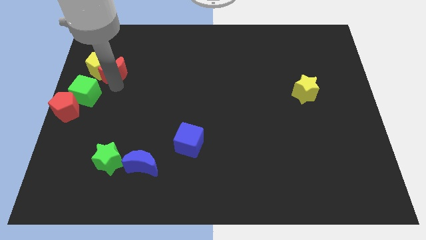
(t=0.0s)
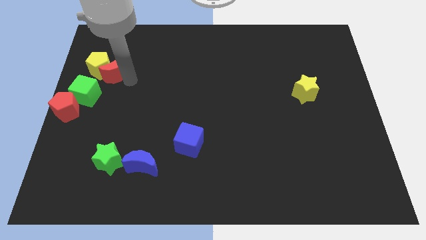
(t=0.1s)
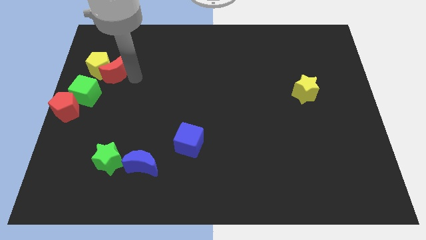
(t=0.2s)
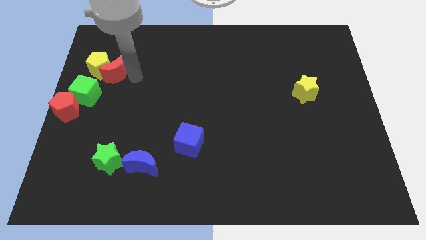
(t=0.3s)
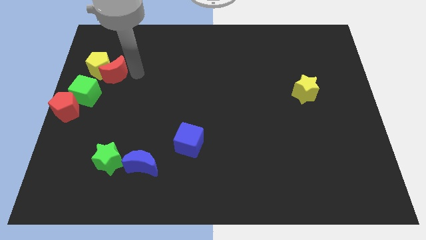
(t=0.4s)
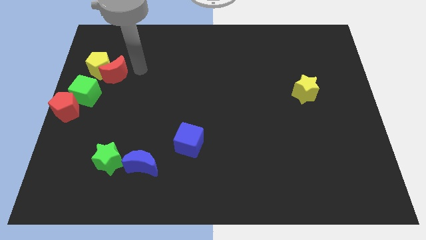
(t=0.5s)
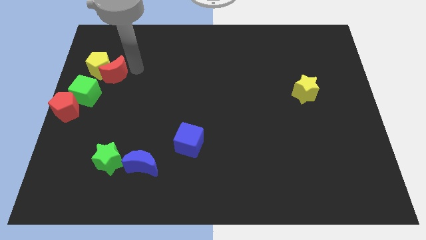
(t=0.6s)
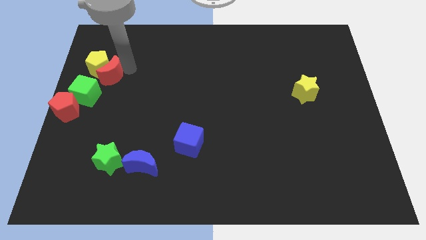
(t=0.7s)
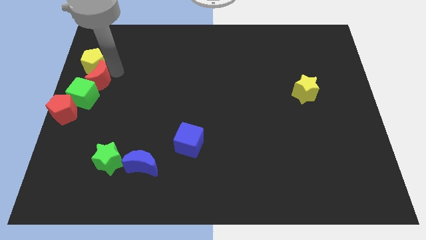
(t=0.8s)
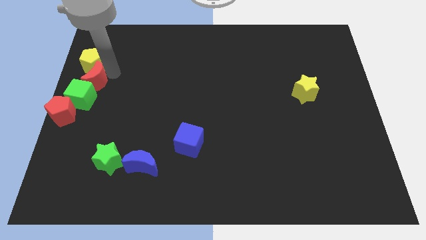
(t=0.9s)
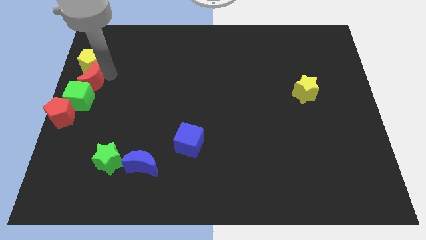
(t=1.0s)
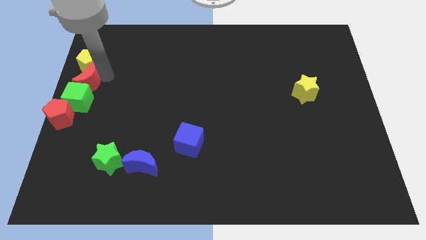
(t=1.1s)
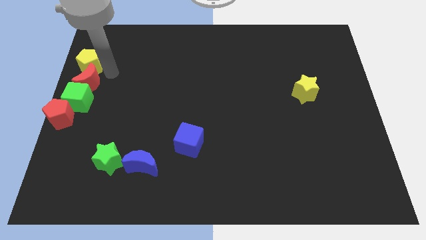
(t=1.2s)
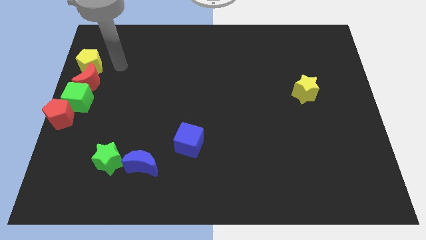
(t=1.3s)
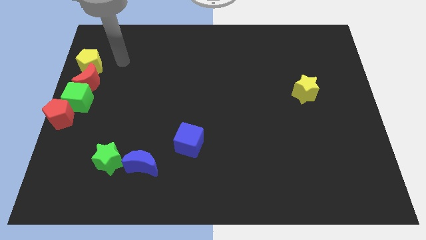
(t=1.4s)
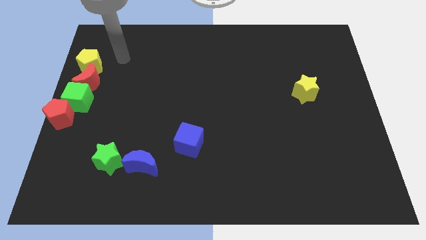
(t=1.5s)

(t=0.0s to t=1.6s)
form a line of objects with red pentagonred crescentgreen cubeyellow pentagon at left side of the board

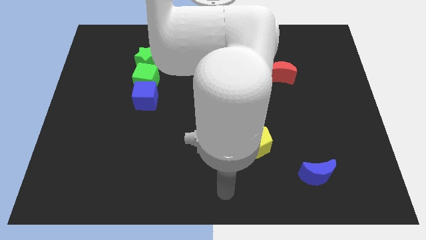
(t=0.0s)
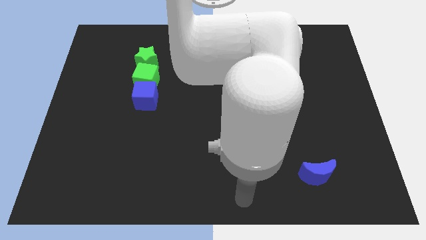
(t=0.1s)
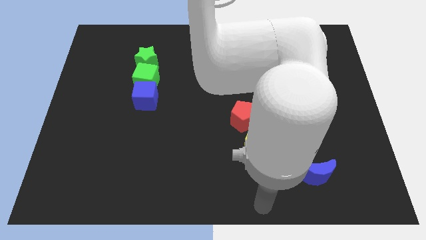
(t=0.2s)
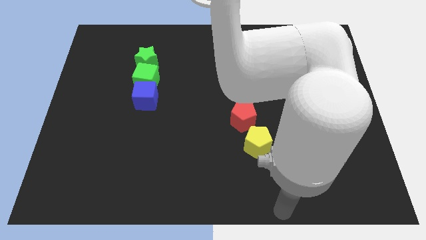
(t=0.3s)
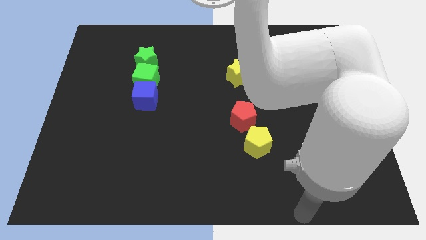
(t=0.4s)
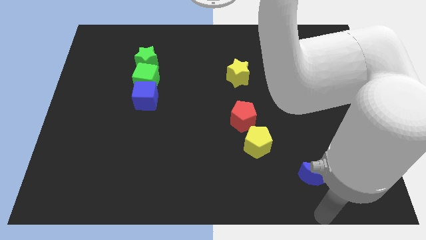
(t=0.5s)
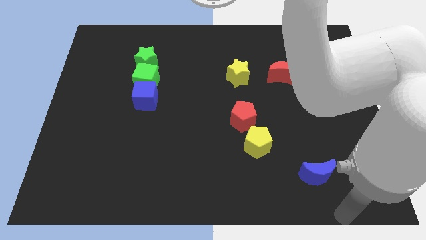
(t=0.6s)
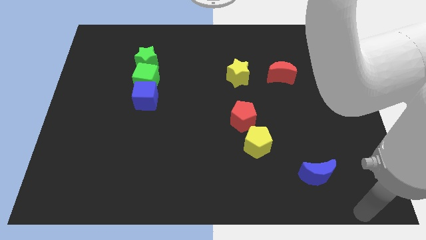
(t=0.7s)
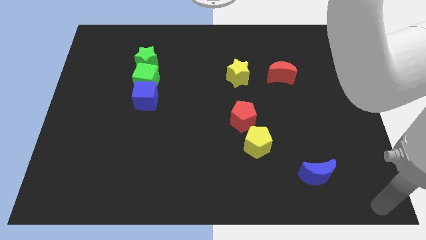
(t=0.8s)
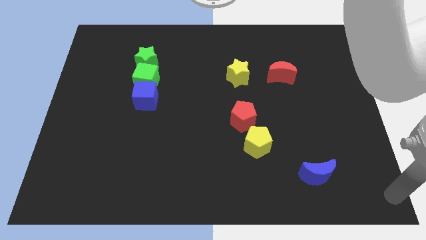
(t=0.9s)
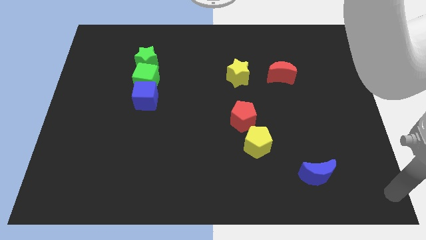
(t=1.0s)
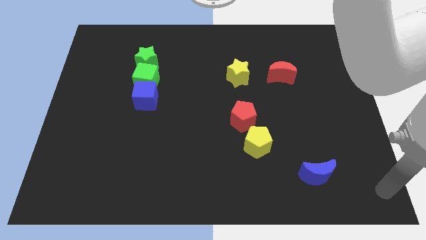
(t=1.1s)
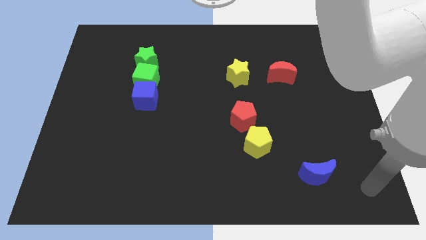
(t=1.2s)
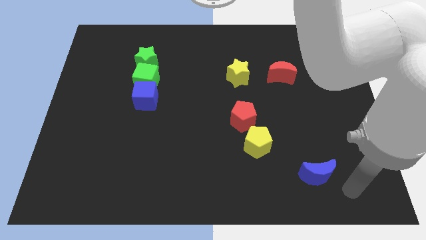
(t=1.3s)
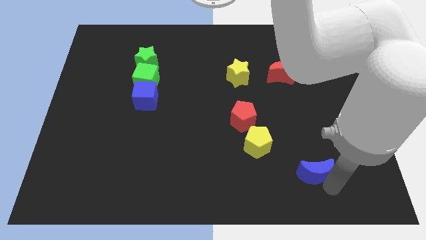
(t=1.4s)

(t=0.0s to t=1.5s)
place your arm to the bottom of blue moon

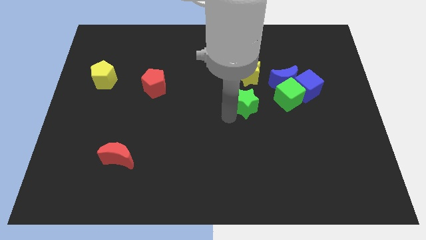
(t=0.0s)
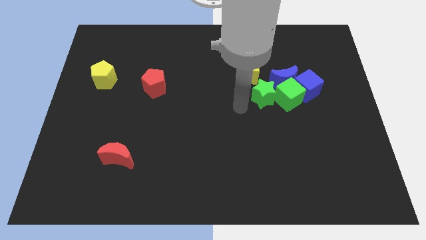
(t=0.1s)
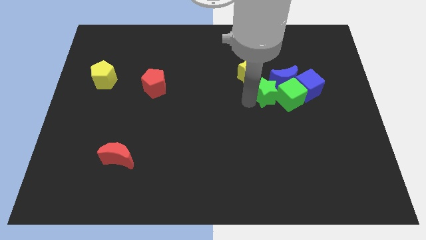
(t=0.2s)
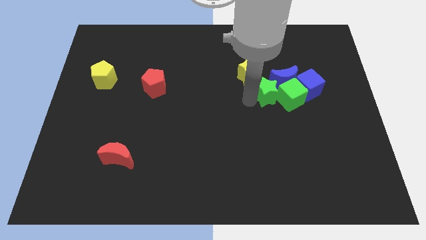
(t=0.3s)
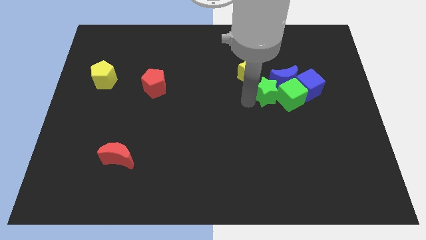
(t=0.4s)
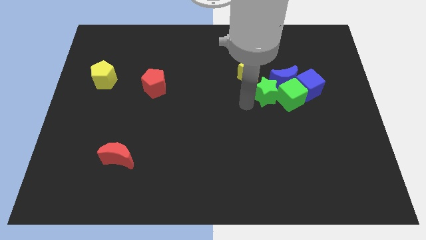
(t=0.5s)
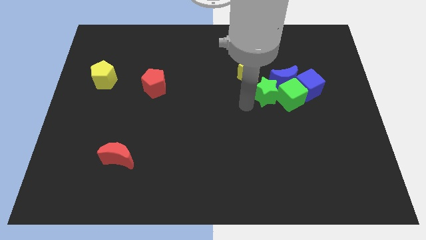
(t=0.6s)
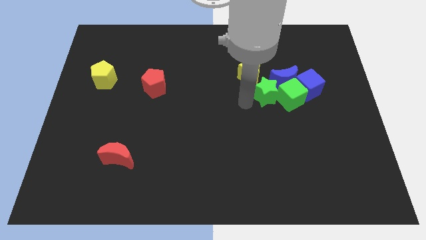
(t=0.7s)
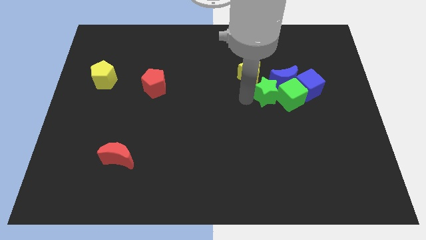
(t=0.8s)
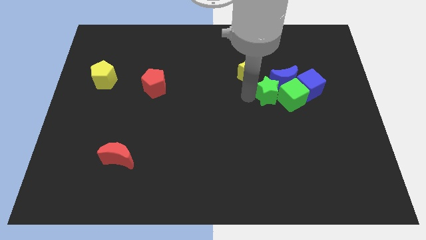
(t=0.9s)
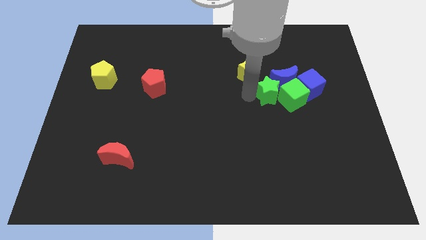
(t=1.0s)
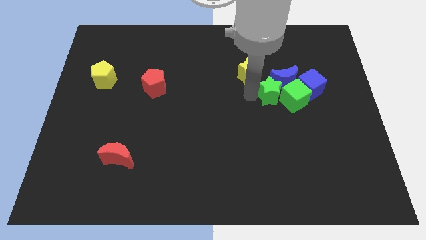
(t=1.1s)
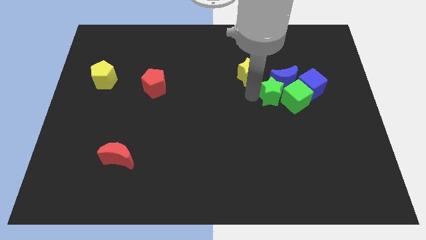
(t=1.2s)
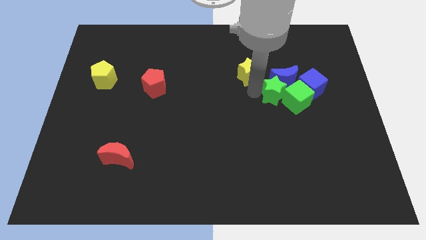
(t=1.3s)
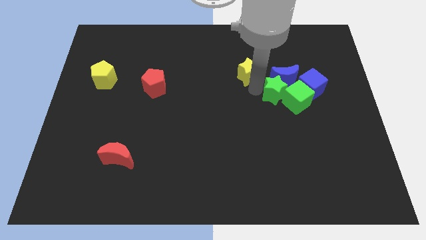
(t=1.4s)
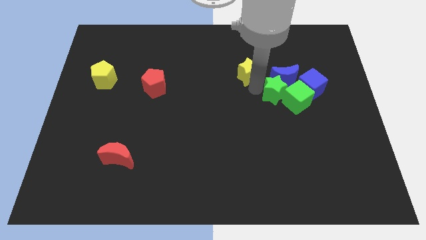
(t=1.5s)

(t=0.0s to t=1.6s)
push the green star into the green cube

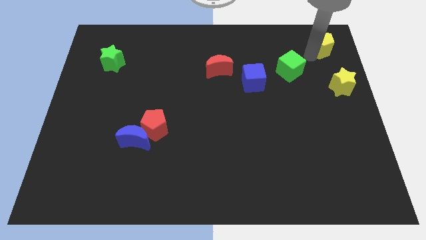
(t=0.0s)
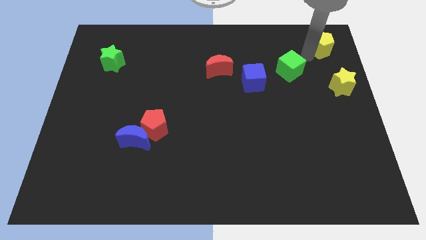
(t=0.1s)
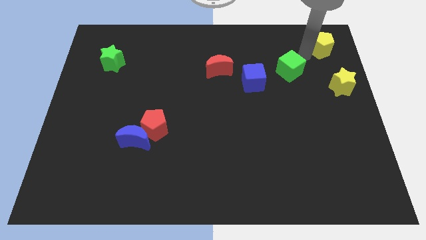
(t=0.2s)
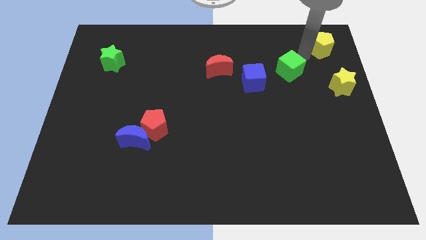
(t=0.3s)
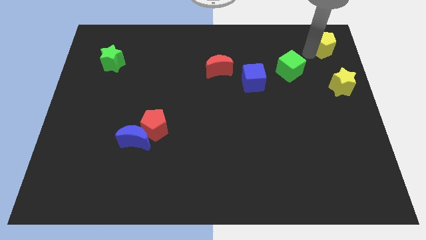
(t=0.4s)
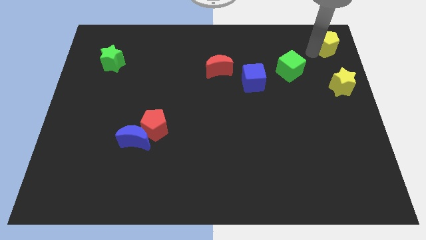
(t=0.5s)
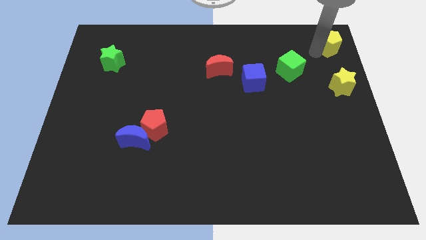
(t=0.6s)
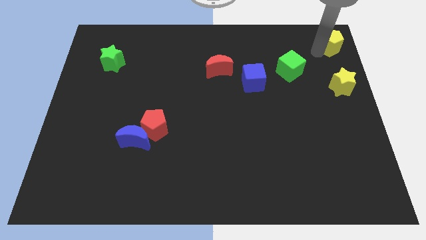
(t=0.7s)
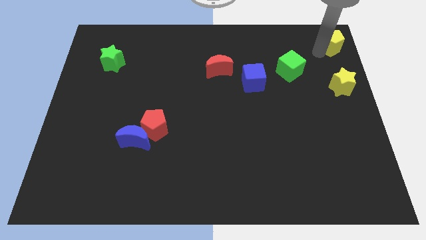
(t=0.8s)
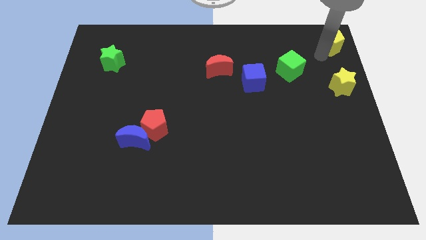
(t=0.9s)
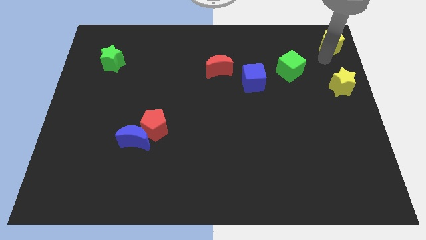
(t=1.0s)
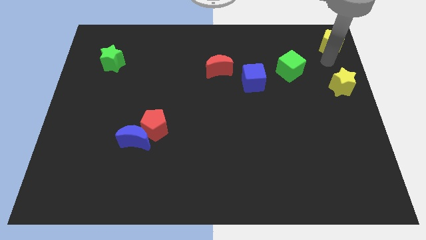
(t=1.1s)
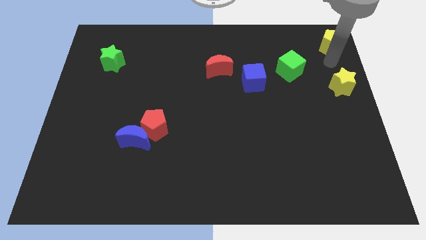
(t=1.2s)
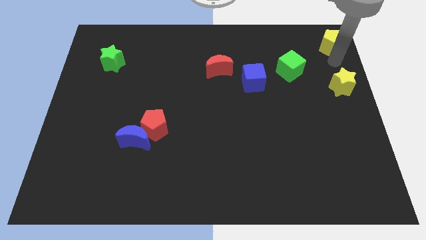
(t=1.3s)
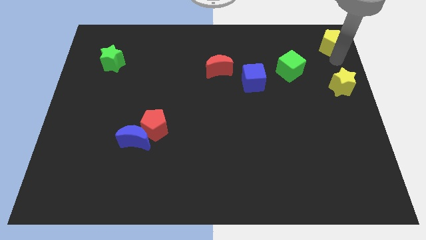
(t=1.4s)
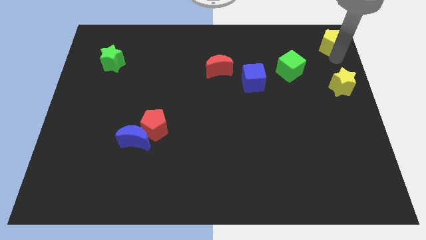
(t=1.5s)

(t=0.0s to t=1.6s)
put the yellow pentagon at the top right corner

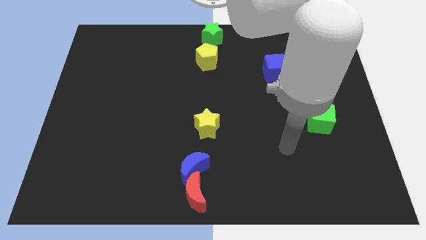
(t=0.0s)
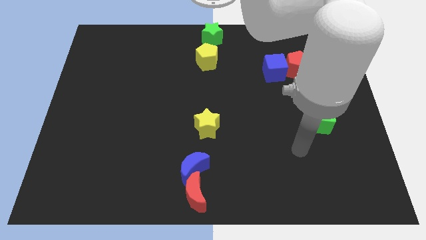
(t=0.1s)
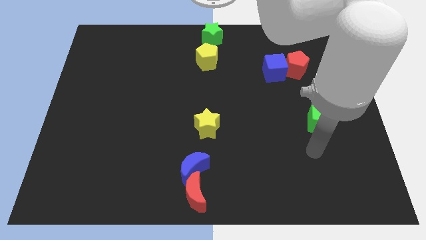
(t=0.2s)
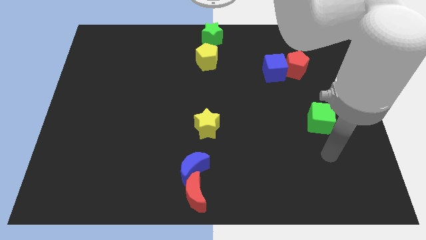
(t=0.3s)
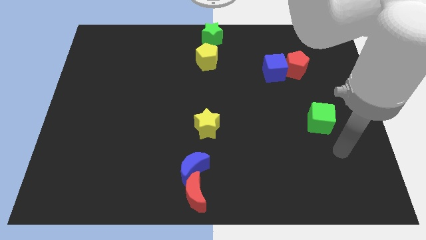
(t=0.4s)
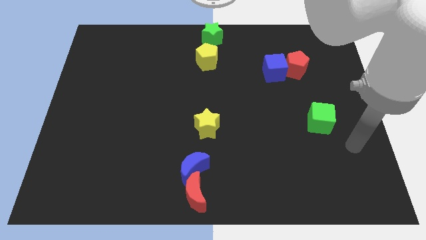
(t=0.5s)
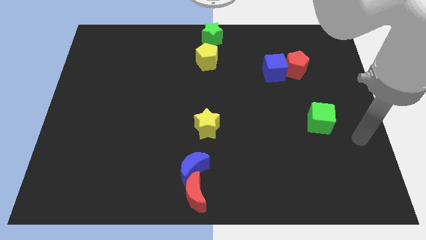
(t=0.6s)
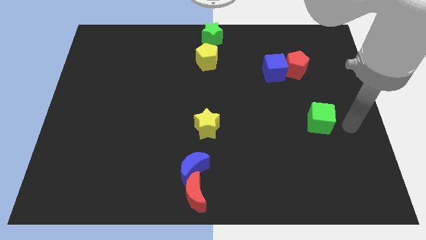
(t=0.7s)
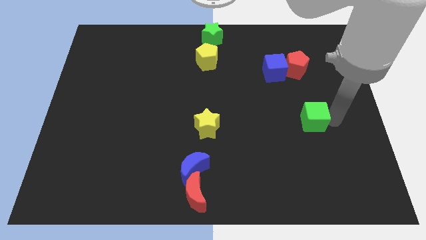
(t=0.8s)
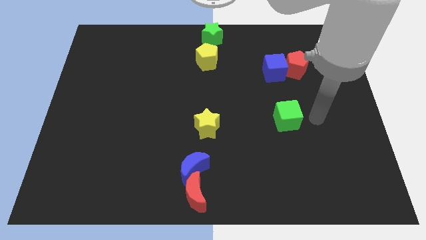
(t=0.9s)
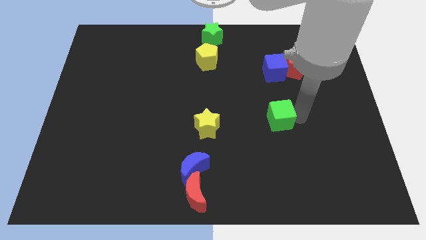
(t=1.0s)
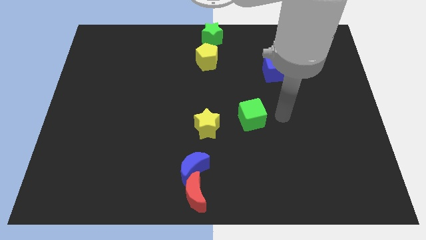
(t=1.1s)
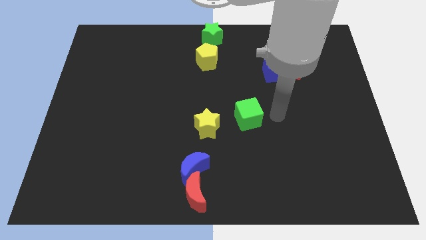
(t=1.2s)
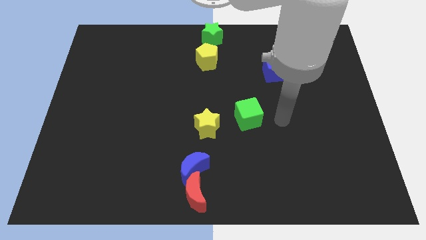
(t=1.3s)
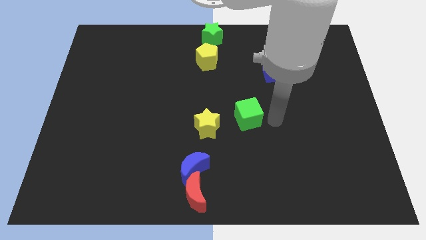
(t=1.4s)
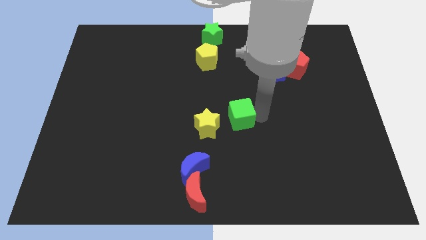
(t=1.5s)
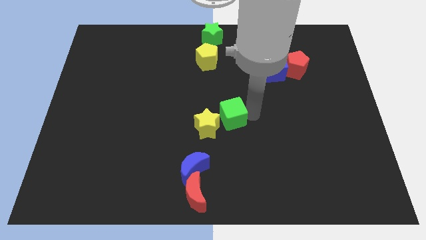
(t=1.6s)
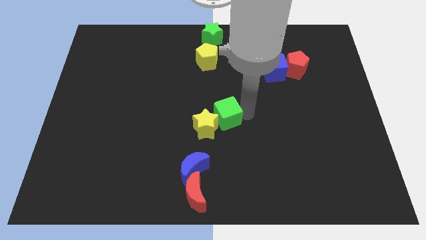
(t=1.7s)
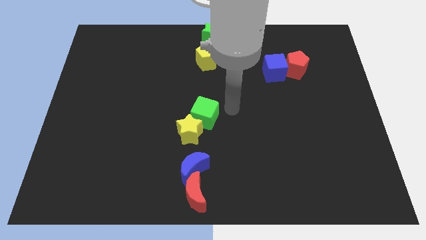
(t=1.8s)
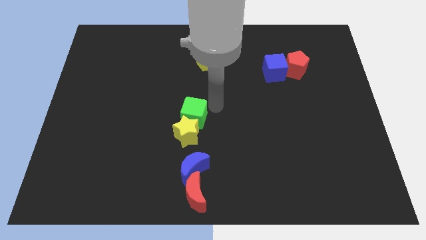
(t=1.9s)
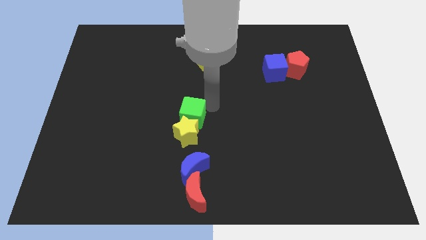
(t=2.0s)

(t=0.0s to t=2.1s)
push the green cube into the yellow star

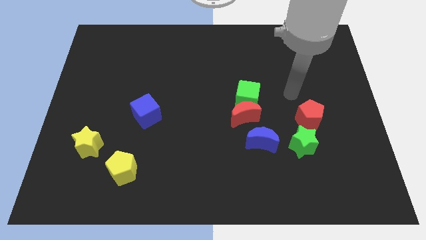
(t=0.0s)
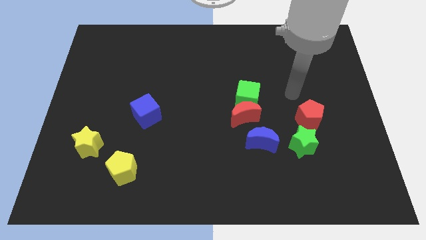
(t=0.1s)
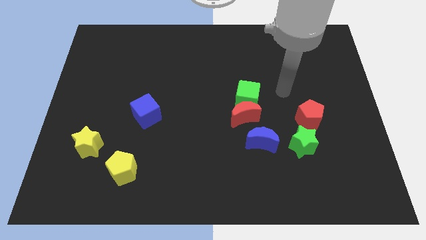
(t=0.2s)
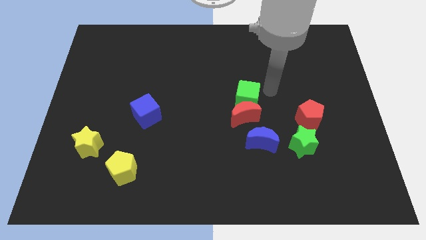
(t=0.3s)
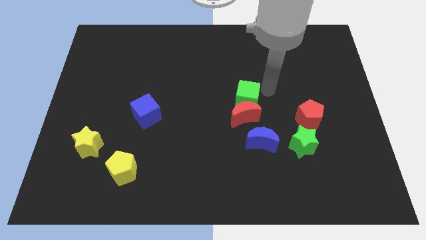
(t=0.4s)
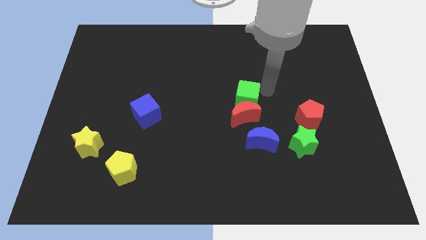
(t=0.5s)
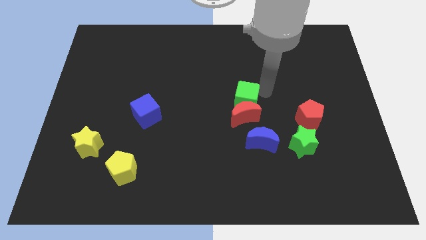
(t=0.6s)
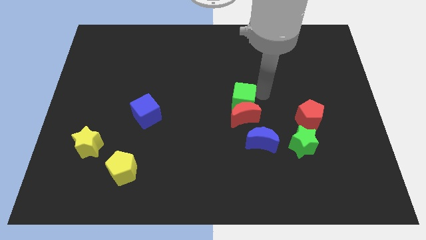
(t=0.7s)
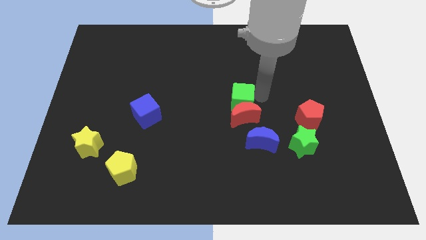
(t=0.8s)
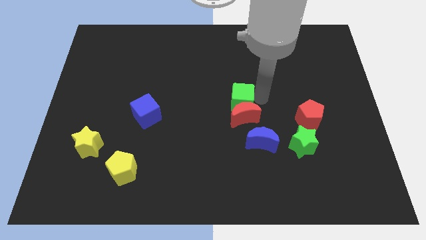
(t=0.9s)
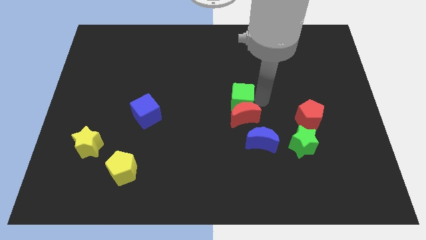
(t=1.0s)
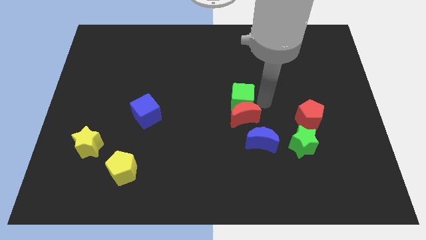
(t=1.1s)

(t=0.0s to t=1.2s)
put the green cube into the red moon
